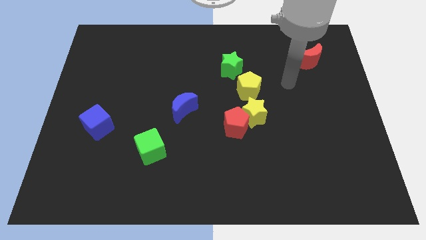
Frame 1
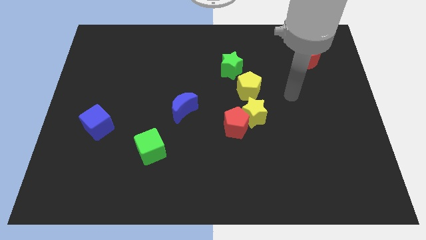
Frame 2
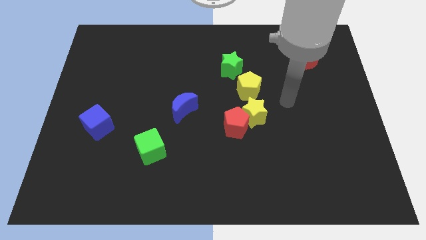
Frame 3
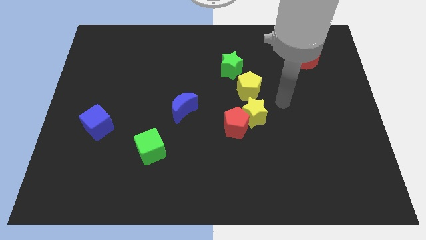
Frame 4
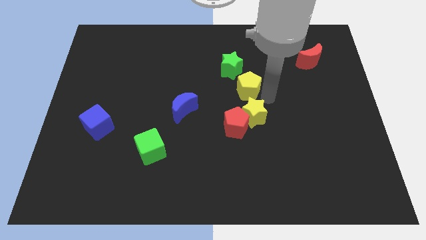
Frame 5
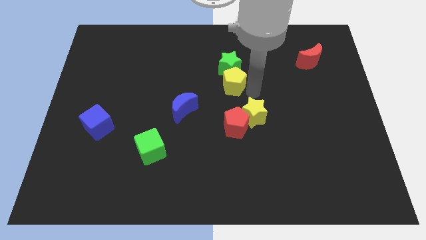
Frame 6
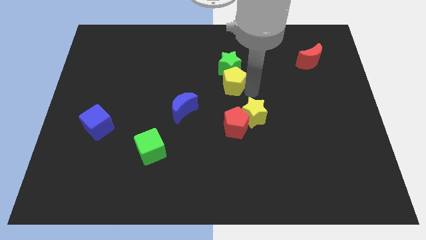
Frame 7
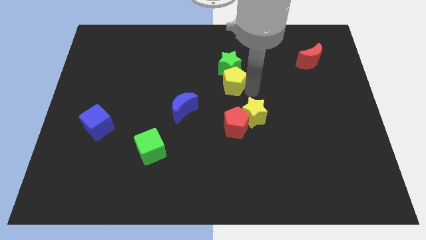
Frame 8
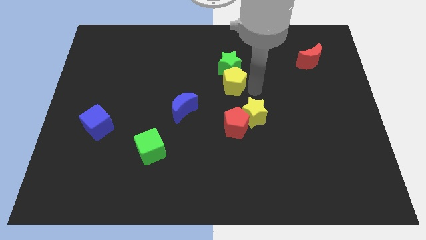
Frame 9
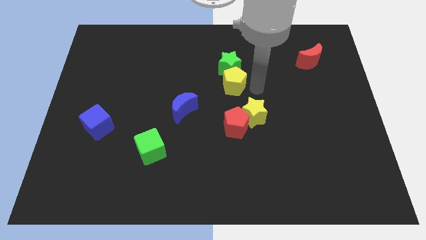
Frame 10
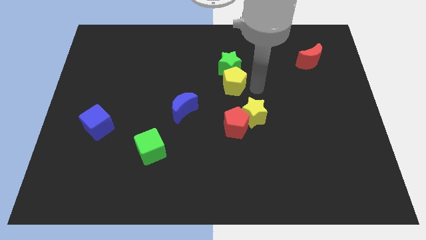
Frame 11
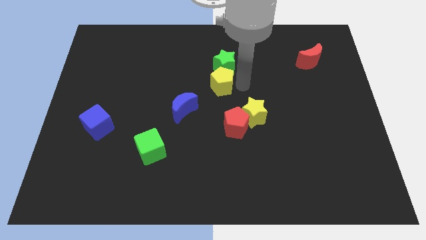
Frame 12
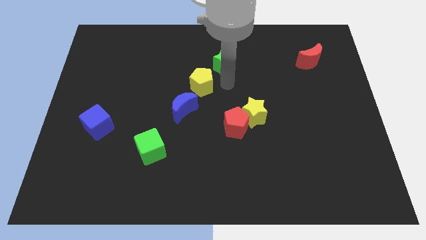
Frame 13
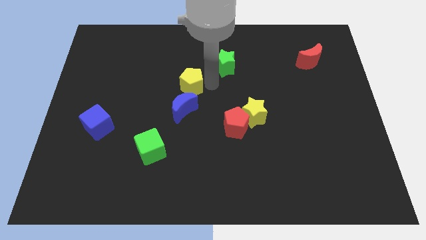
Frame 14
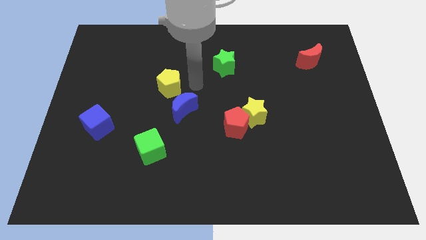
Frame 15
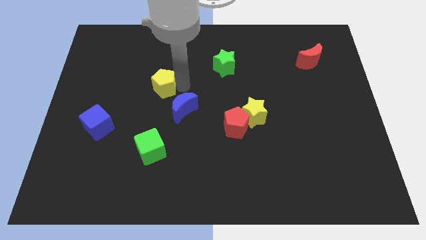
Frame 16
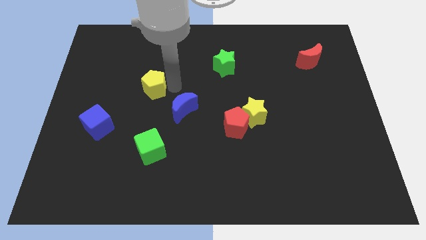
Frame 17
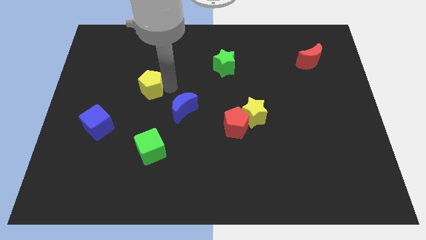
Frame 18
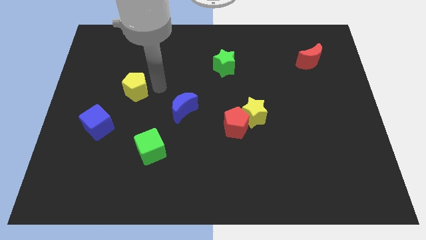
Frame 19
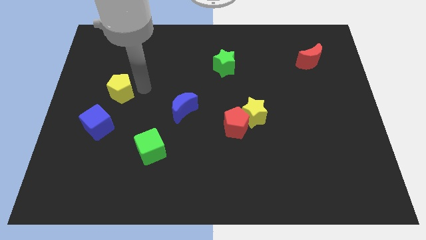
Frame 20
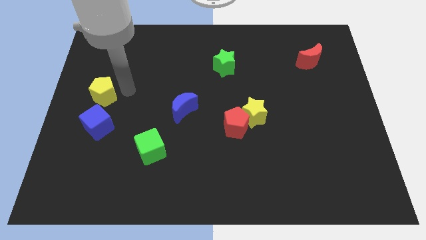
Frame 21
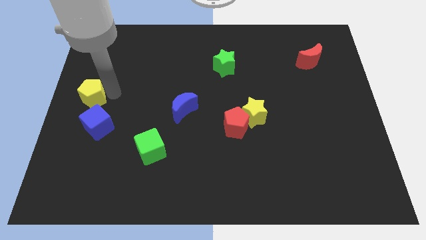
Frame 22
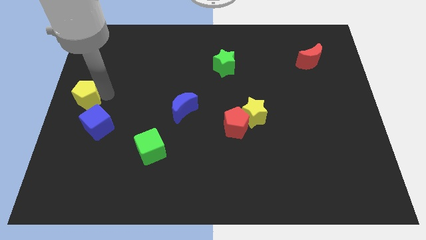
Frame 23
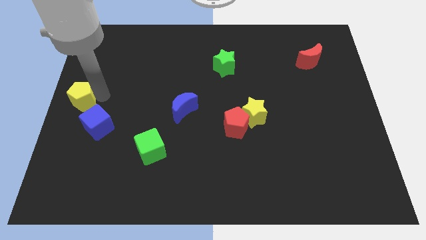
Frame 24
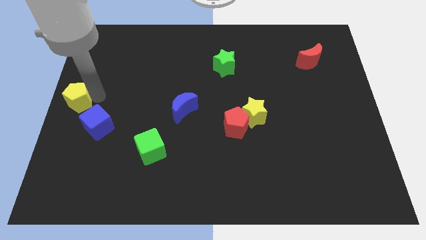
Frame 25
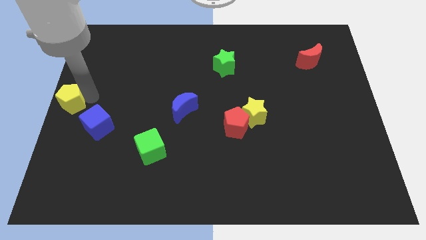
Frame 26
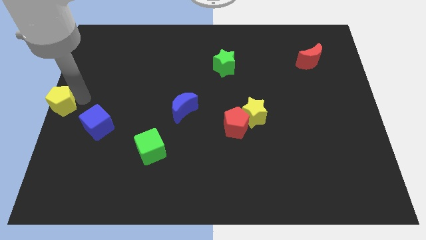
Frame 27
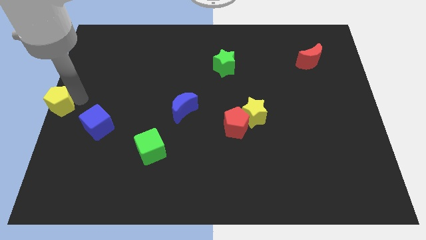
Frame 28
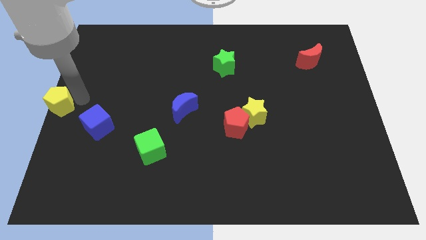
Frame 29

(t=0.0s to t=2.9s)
move yellow pentagon to left center corner of the board

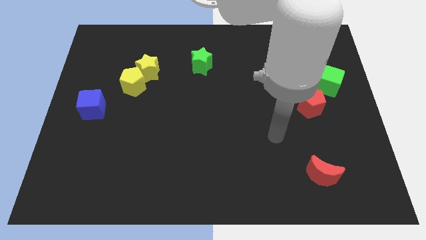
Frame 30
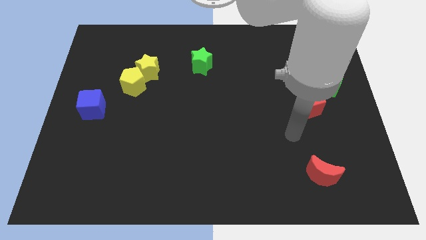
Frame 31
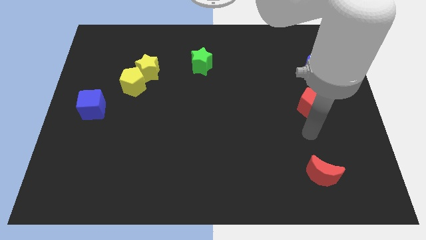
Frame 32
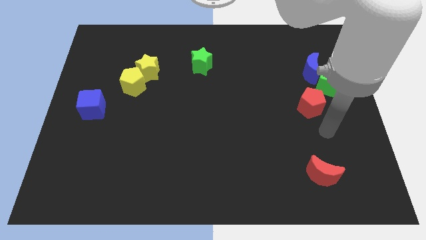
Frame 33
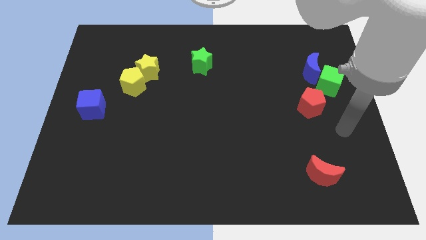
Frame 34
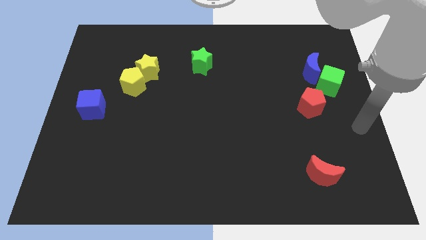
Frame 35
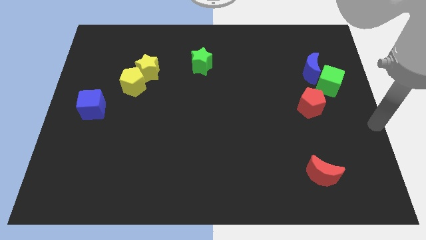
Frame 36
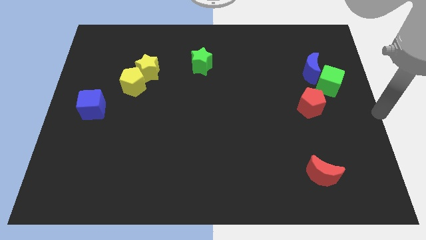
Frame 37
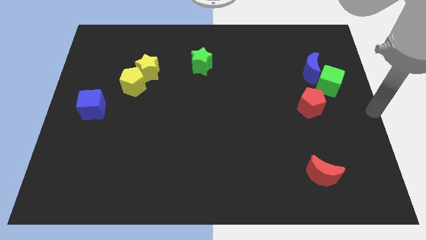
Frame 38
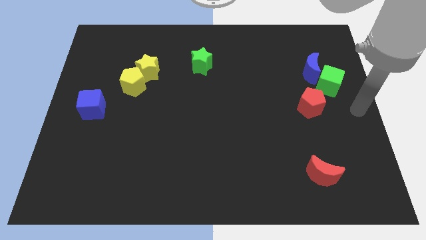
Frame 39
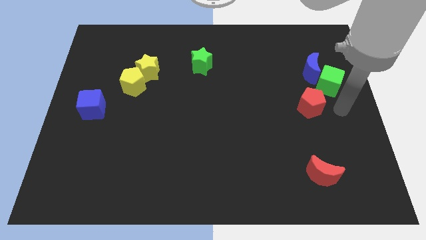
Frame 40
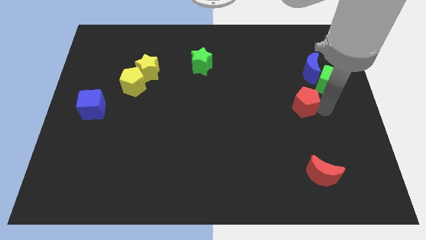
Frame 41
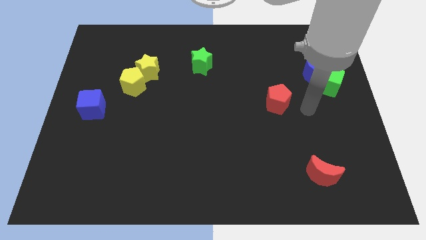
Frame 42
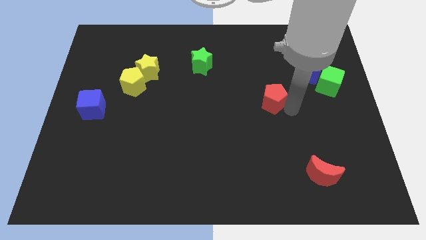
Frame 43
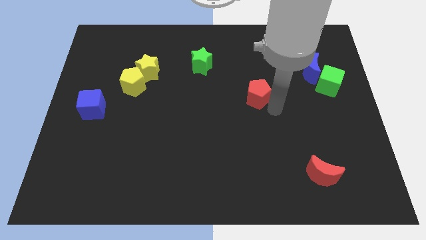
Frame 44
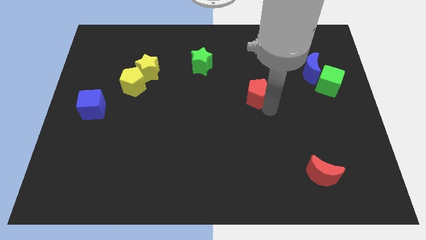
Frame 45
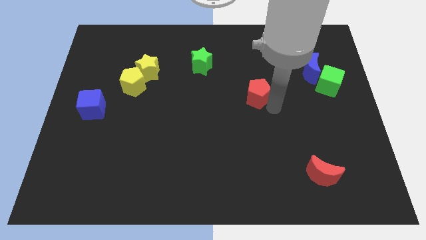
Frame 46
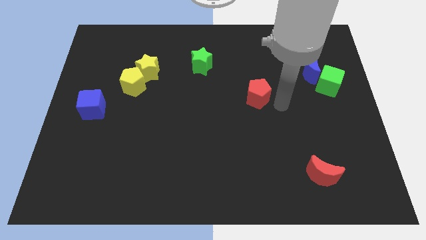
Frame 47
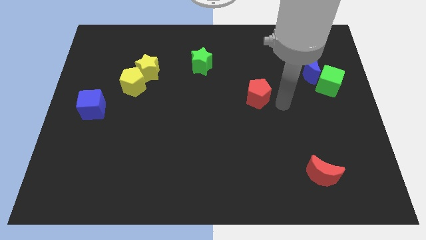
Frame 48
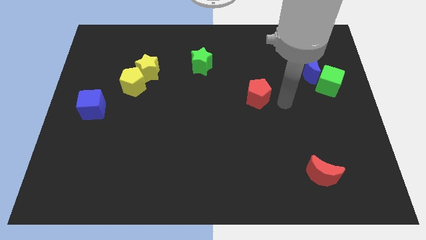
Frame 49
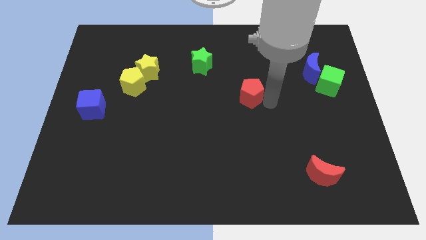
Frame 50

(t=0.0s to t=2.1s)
push the red pentagon diagonally right of the green star

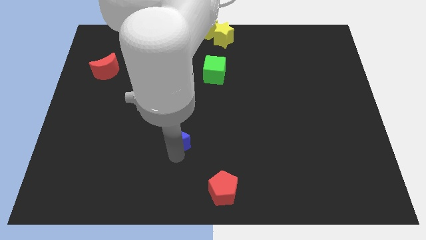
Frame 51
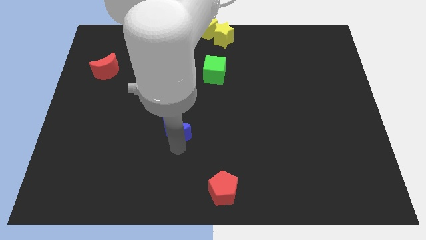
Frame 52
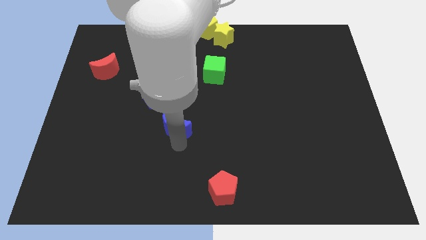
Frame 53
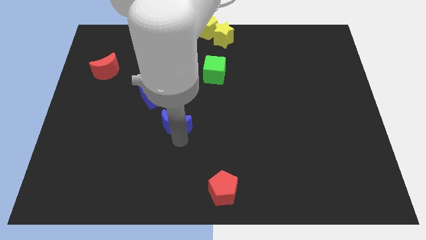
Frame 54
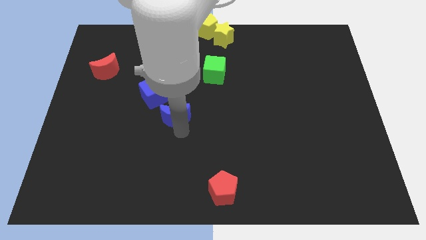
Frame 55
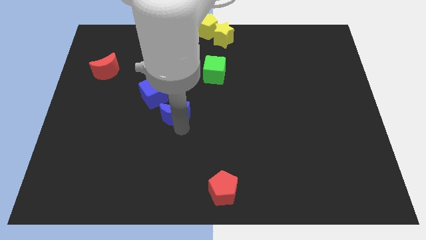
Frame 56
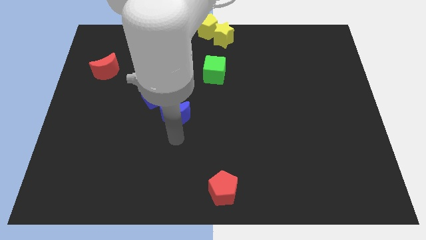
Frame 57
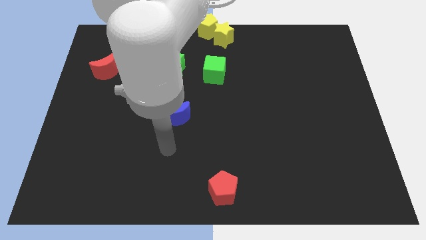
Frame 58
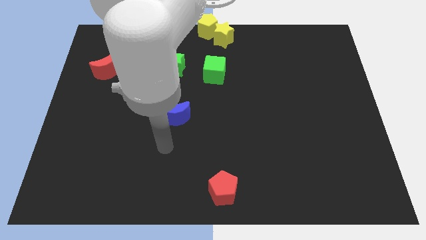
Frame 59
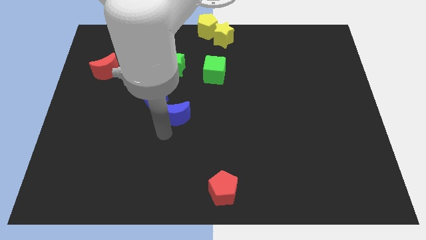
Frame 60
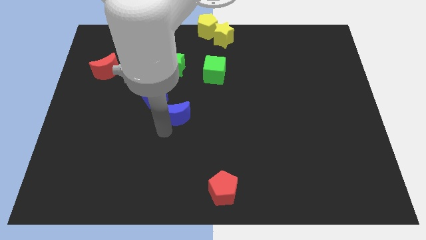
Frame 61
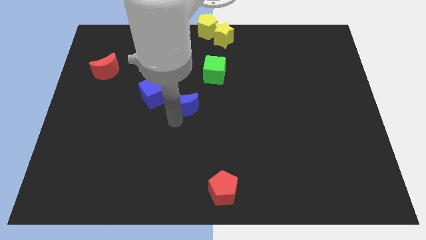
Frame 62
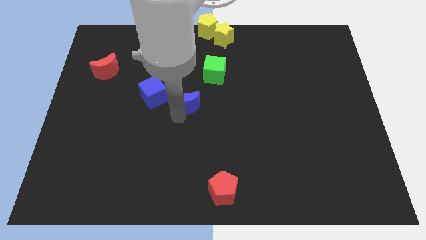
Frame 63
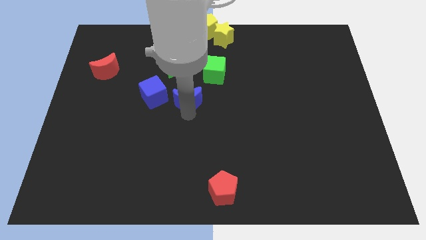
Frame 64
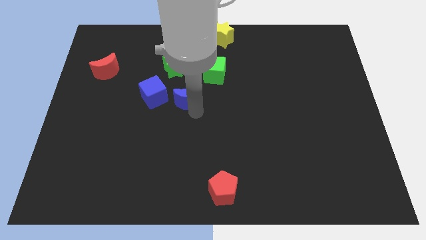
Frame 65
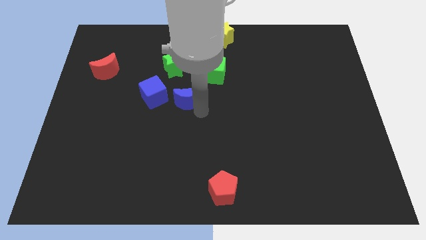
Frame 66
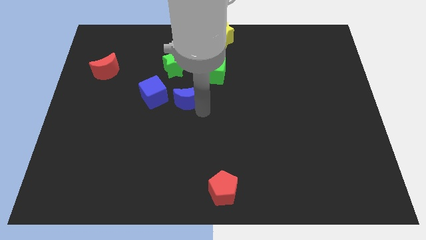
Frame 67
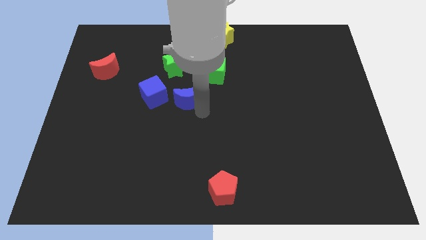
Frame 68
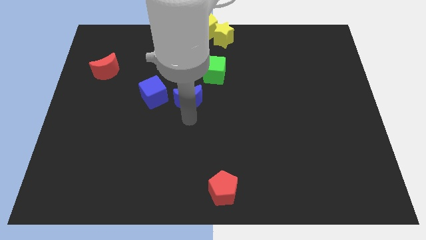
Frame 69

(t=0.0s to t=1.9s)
place the blue moon to the right of the blue cube

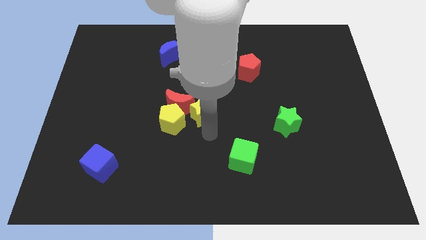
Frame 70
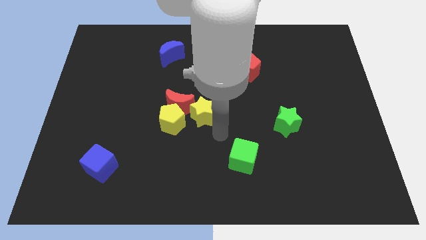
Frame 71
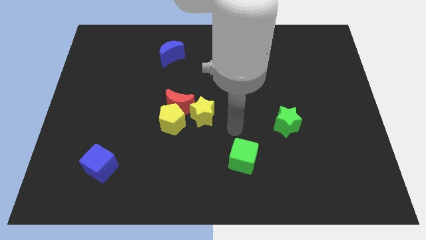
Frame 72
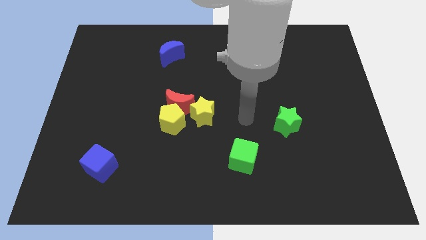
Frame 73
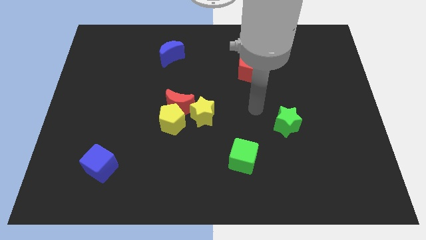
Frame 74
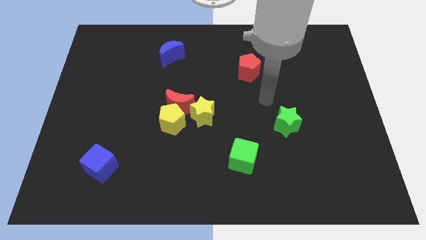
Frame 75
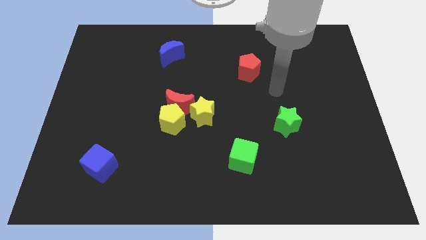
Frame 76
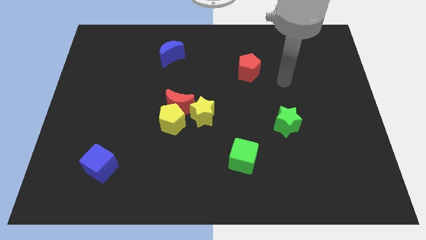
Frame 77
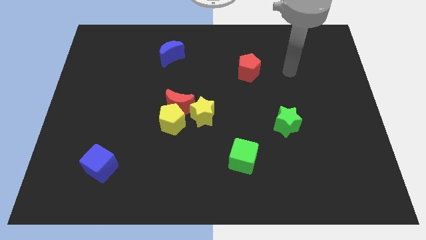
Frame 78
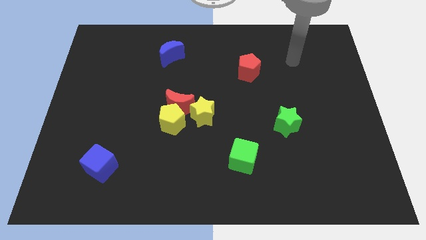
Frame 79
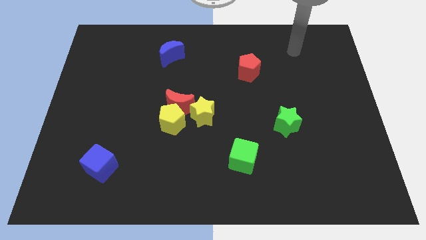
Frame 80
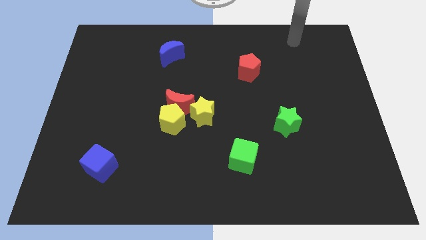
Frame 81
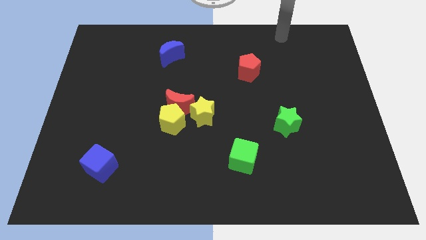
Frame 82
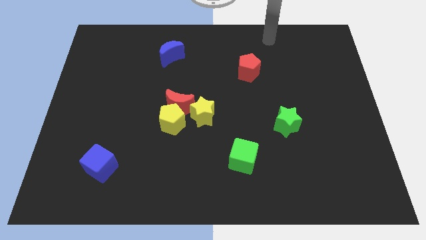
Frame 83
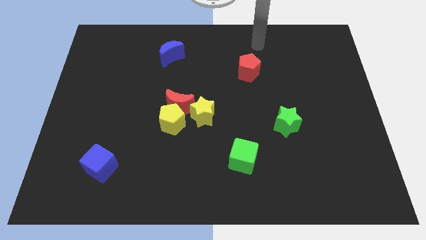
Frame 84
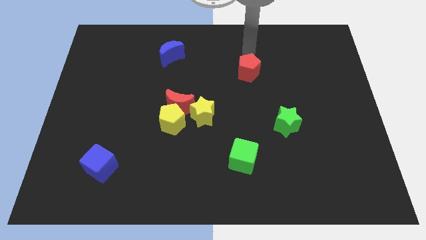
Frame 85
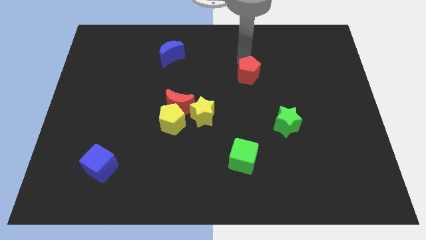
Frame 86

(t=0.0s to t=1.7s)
move the arm from yellow star to the red pentagon

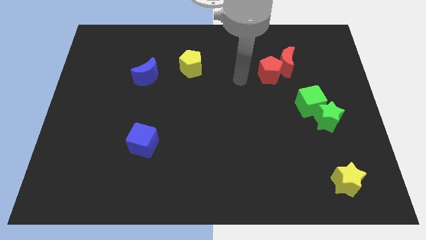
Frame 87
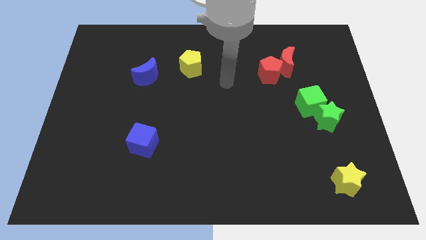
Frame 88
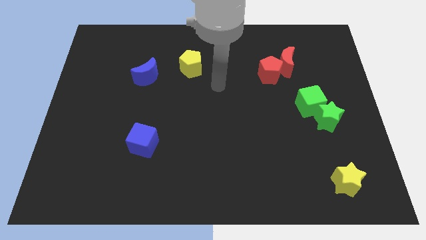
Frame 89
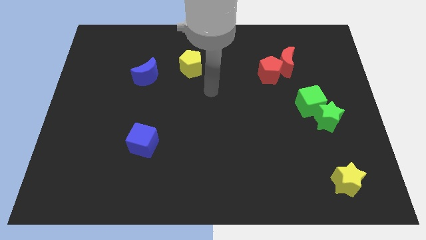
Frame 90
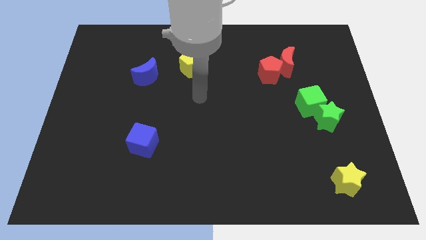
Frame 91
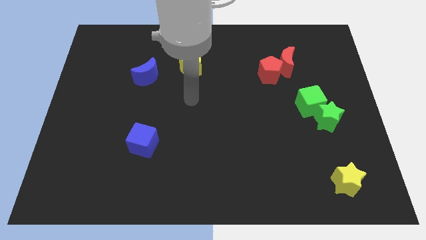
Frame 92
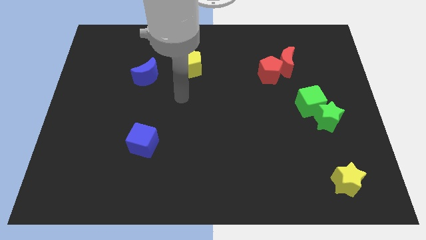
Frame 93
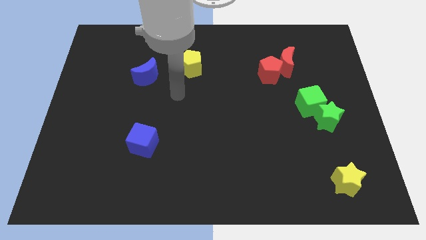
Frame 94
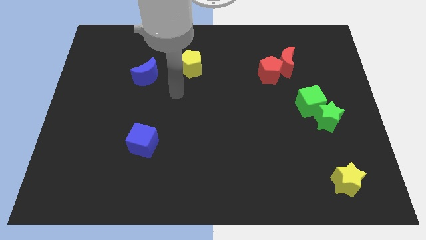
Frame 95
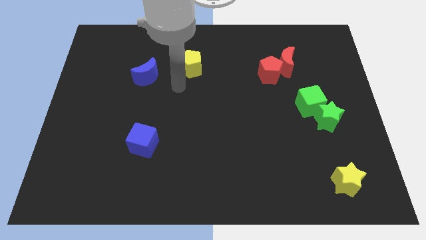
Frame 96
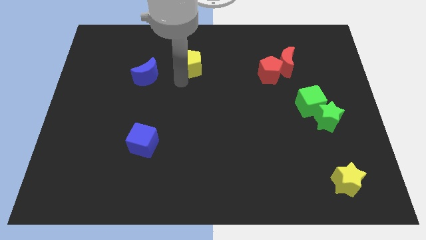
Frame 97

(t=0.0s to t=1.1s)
point your arm at the bottom of the yellow pentagon
